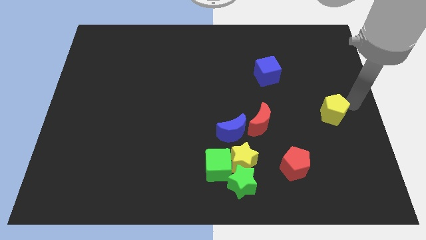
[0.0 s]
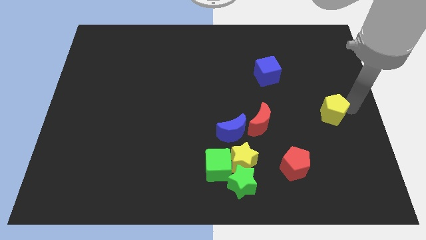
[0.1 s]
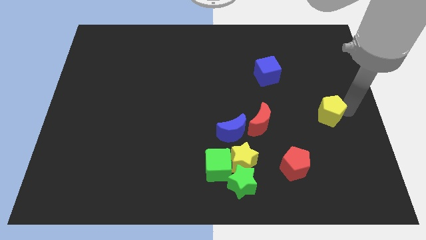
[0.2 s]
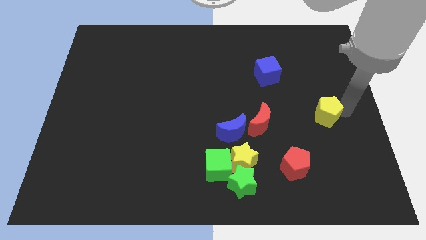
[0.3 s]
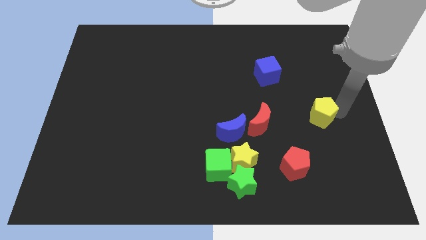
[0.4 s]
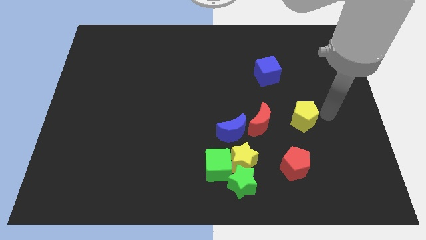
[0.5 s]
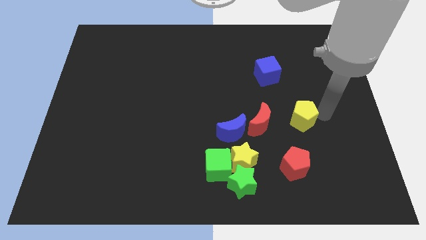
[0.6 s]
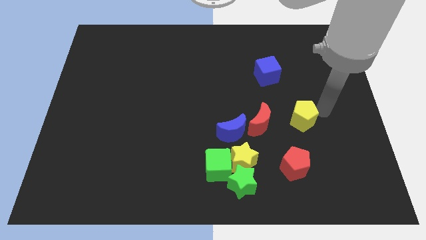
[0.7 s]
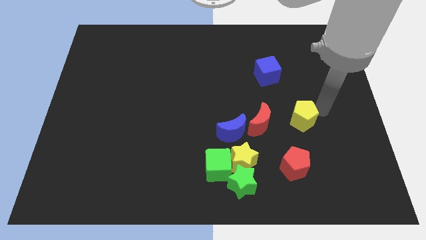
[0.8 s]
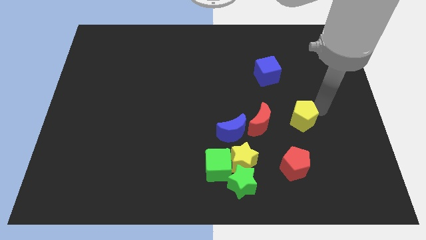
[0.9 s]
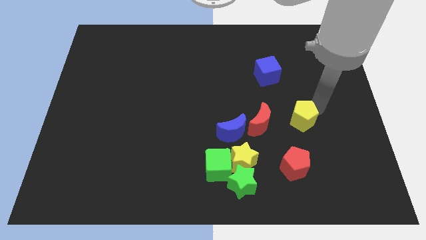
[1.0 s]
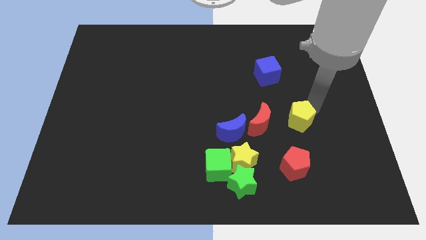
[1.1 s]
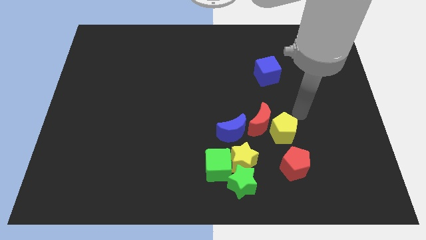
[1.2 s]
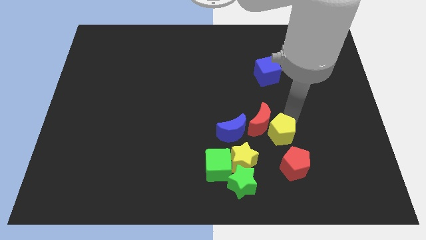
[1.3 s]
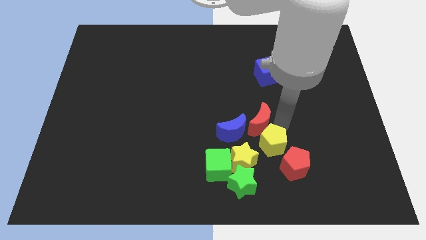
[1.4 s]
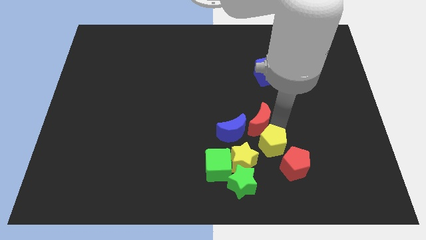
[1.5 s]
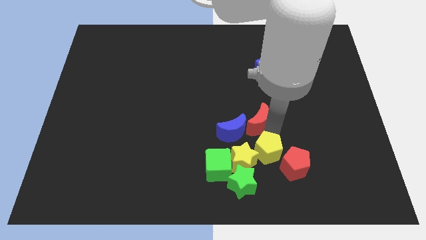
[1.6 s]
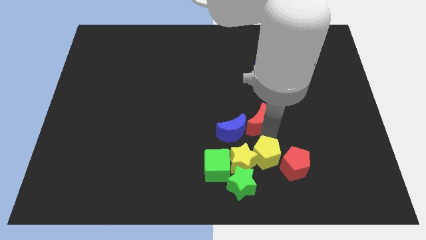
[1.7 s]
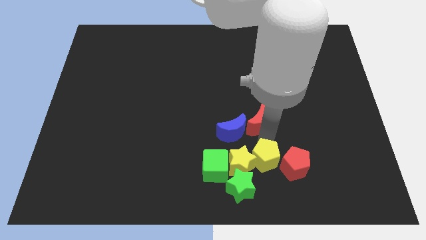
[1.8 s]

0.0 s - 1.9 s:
push the yellow pentagon into yellow star

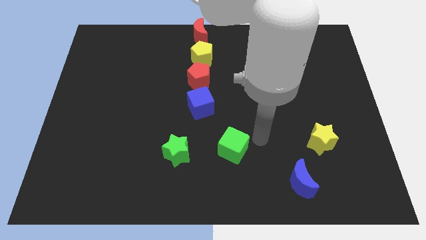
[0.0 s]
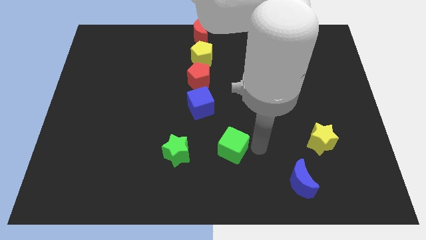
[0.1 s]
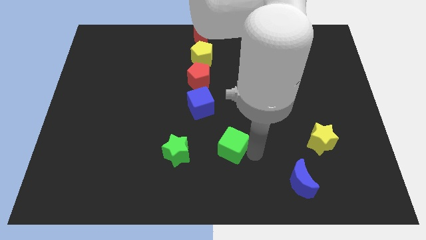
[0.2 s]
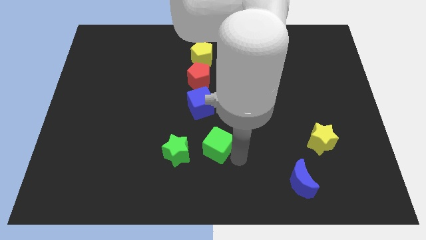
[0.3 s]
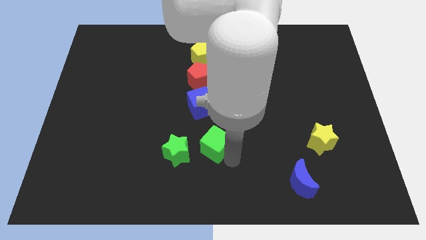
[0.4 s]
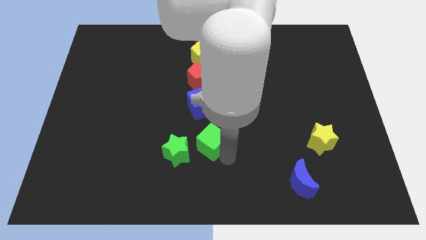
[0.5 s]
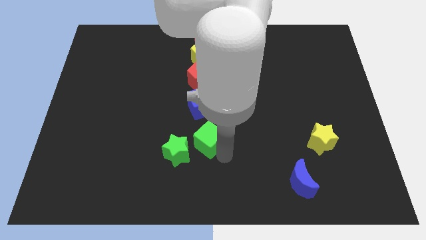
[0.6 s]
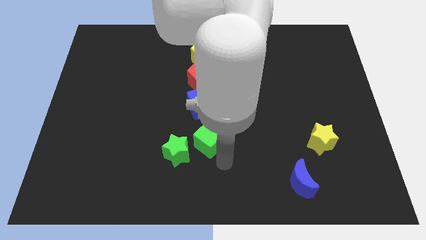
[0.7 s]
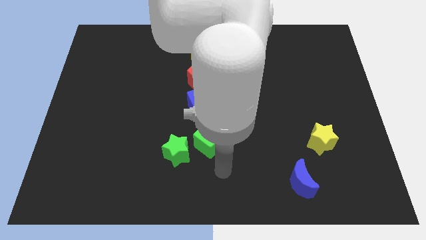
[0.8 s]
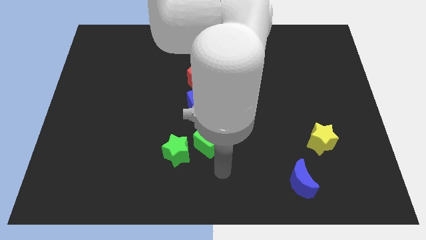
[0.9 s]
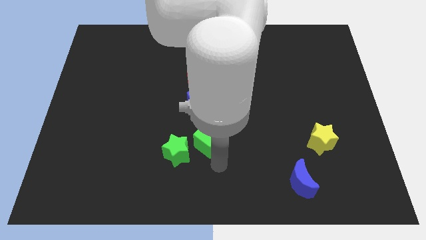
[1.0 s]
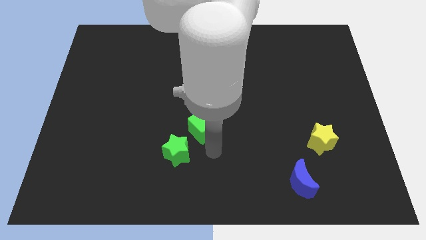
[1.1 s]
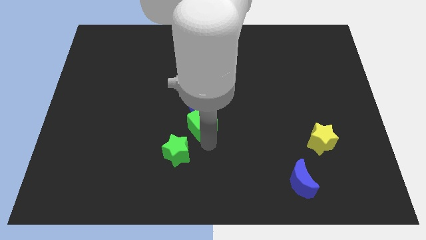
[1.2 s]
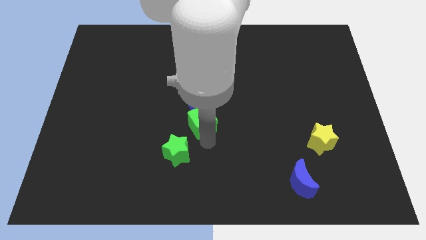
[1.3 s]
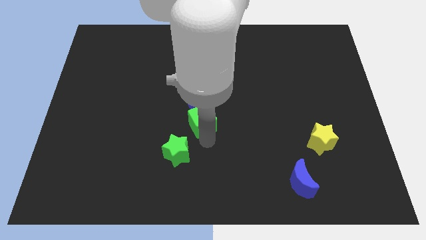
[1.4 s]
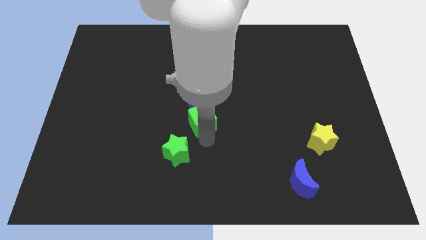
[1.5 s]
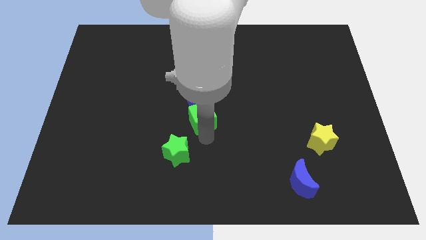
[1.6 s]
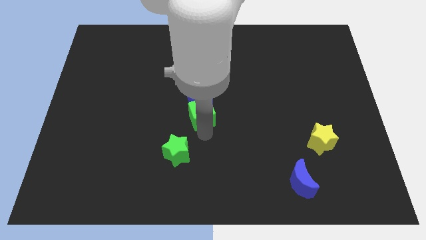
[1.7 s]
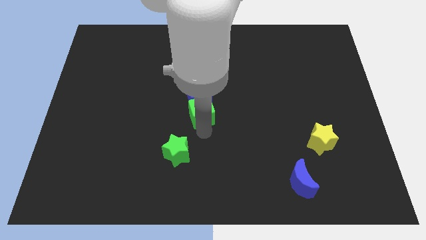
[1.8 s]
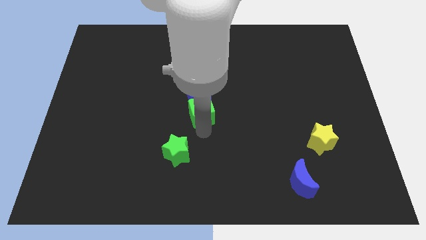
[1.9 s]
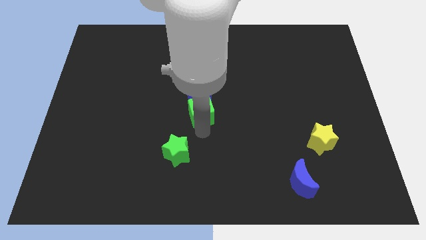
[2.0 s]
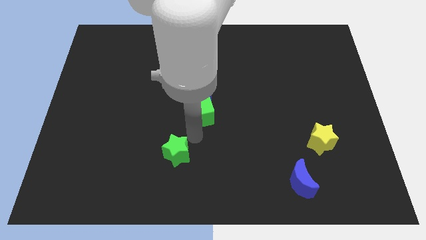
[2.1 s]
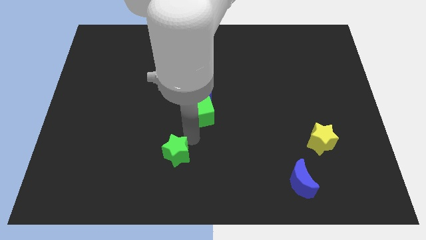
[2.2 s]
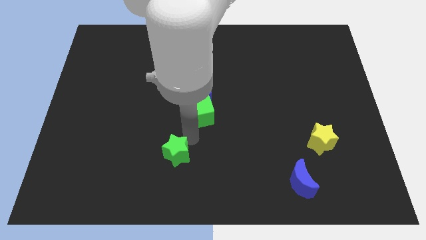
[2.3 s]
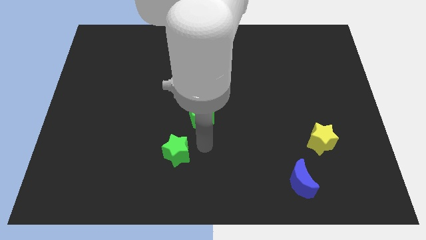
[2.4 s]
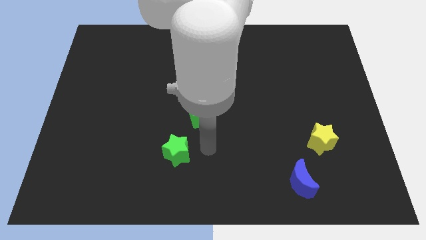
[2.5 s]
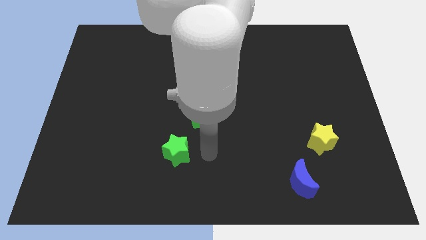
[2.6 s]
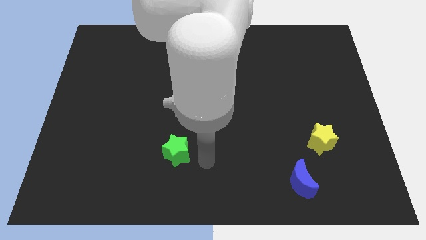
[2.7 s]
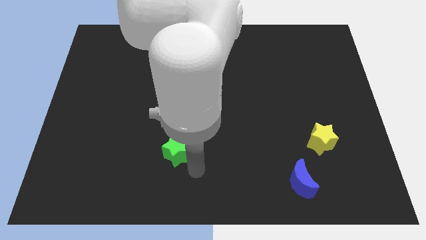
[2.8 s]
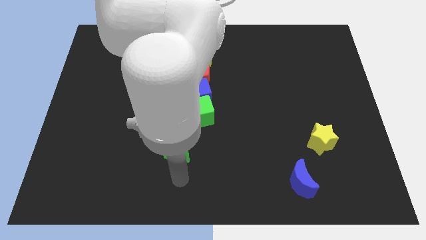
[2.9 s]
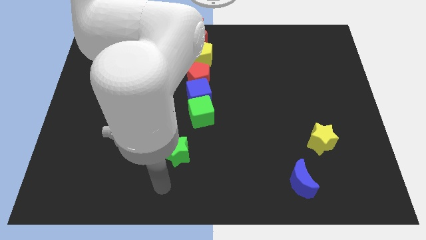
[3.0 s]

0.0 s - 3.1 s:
push the green cube to the bottom of blue cube

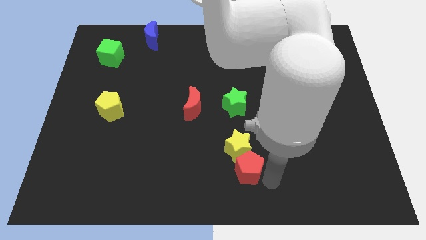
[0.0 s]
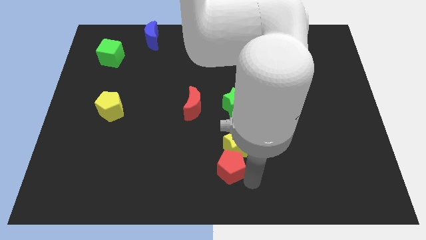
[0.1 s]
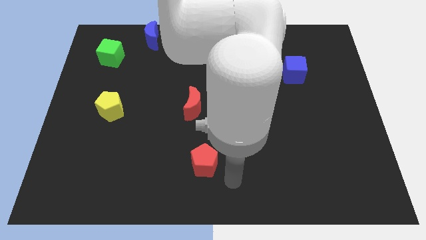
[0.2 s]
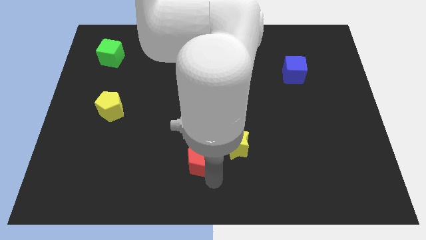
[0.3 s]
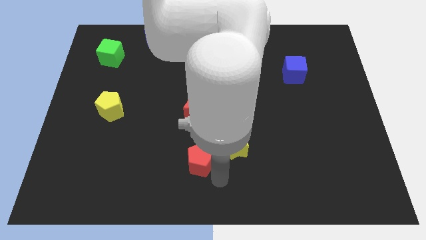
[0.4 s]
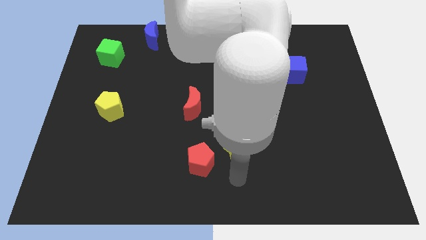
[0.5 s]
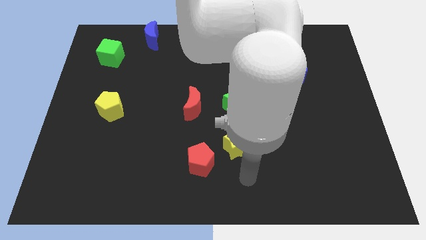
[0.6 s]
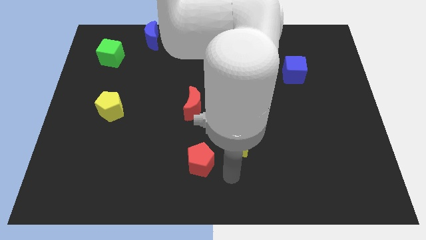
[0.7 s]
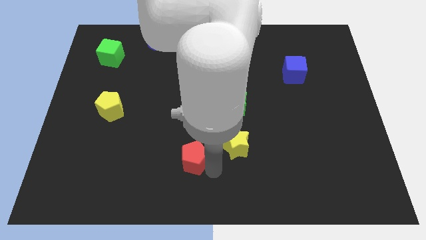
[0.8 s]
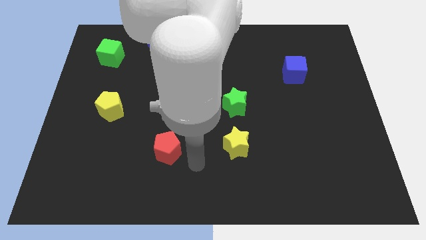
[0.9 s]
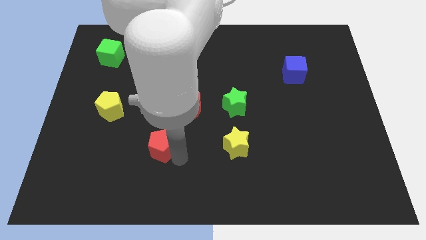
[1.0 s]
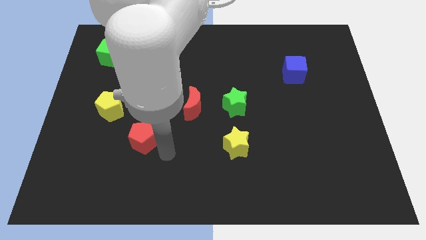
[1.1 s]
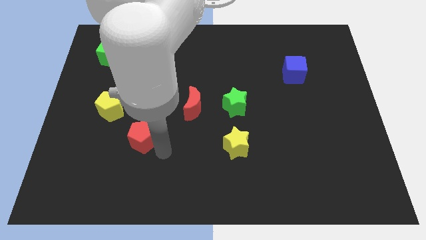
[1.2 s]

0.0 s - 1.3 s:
slide the red pentagon diagonally bottom left to the red moon

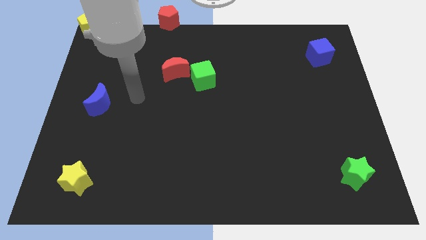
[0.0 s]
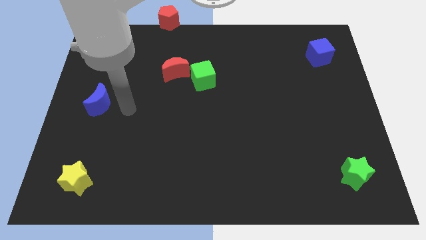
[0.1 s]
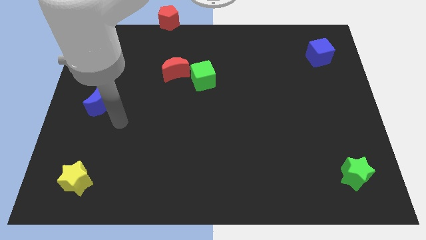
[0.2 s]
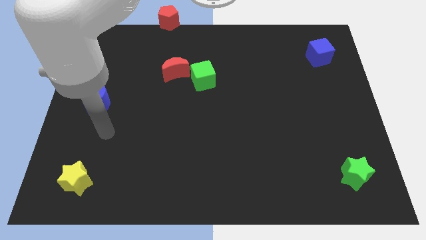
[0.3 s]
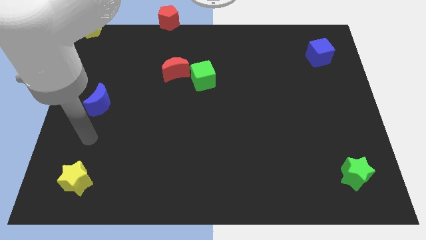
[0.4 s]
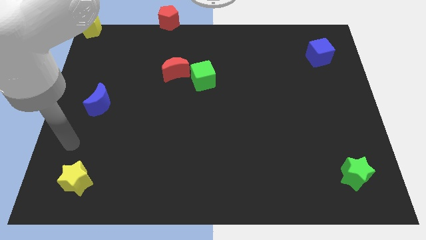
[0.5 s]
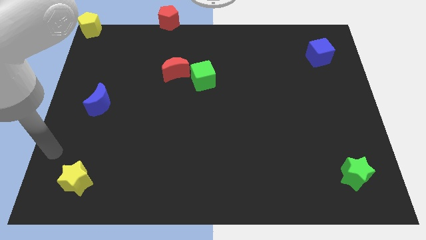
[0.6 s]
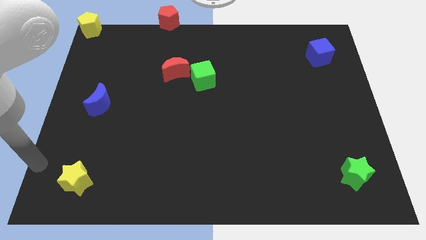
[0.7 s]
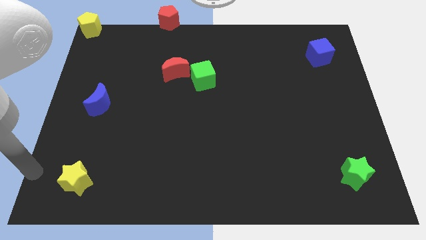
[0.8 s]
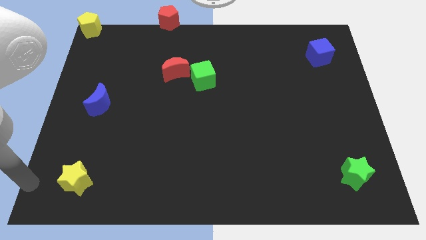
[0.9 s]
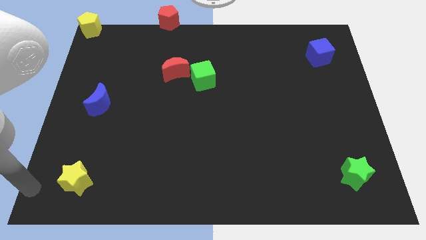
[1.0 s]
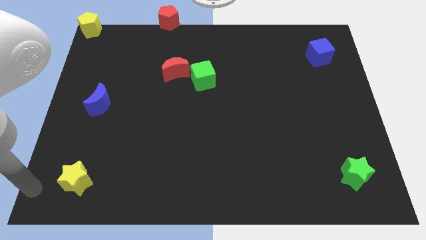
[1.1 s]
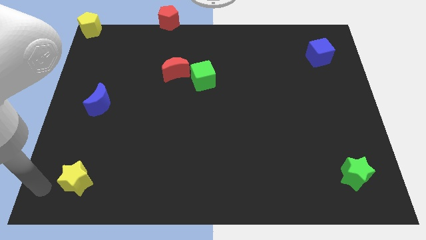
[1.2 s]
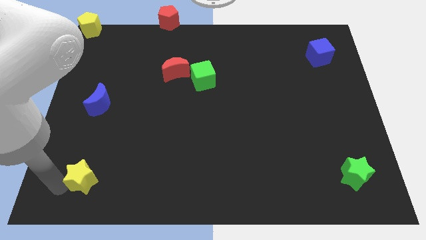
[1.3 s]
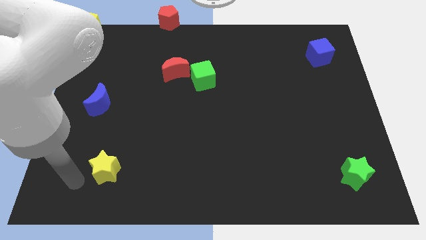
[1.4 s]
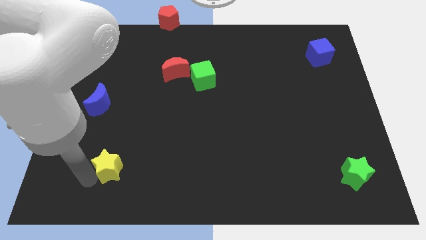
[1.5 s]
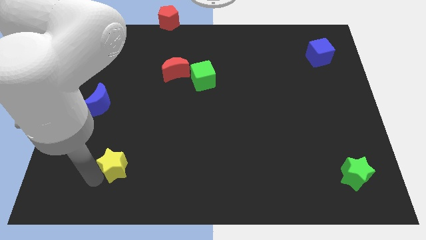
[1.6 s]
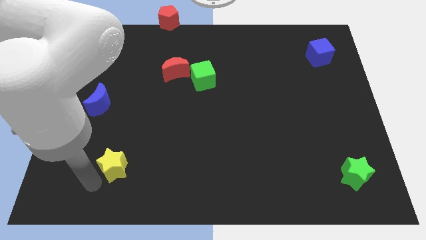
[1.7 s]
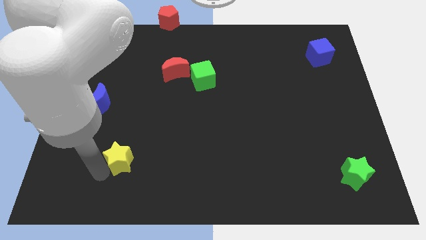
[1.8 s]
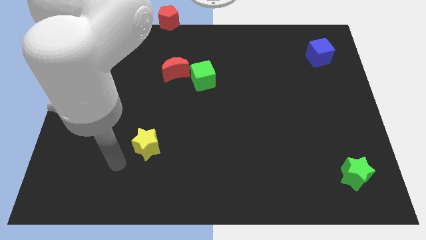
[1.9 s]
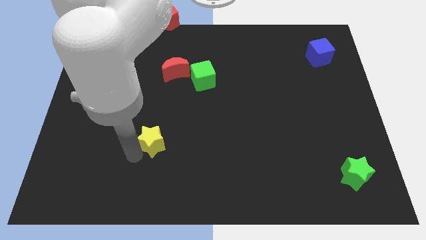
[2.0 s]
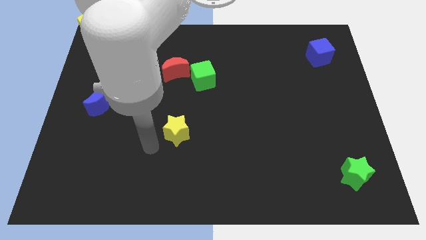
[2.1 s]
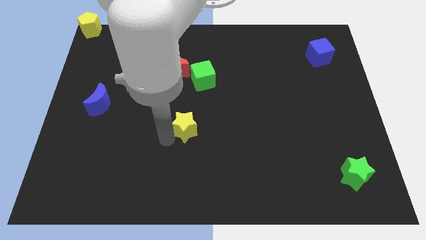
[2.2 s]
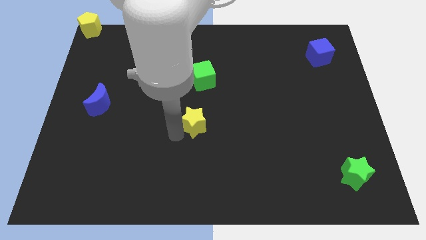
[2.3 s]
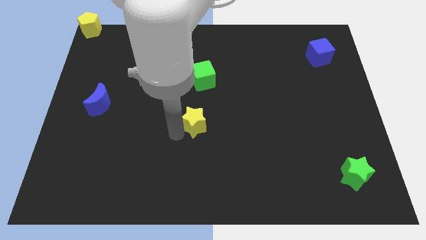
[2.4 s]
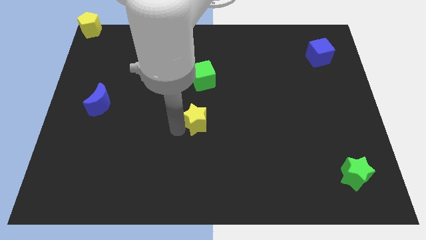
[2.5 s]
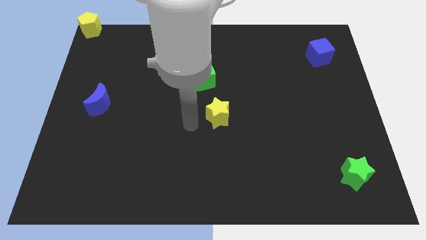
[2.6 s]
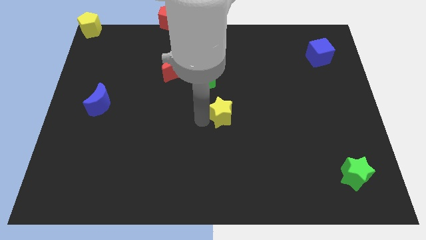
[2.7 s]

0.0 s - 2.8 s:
move yellow star to the center
